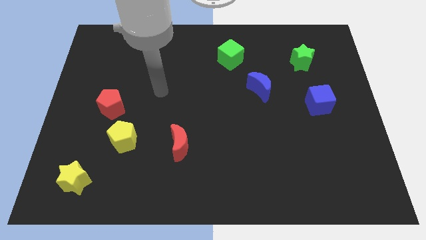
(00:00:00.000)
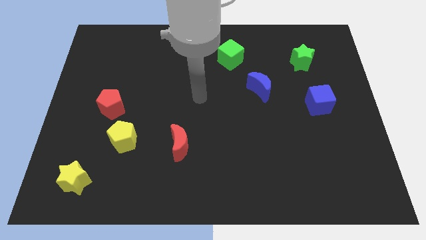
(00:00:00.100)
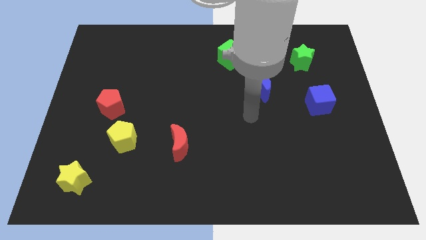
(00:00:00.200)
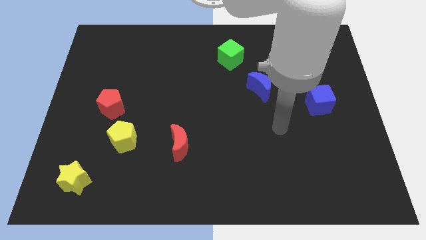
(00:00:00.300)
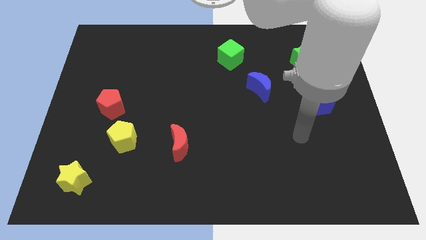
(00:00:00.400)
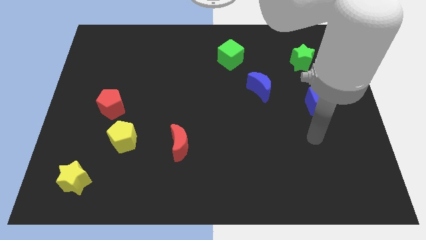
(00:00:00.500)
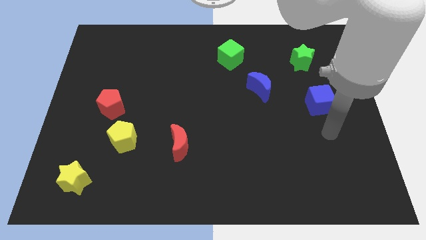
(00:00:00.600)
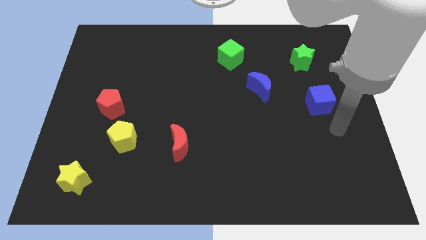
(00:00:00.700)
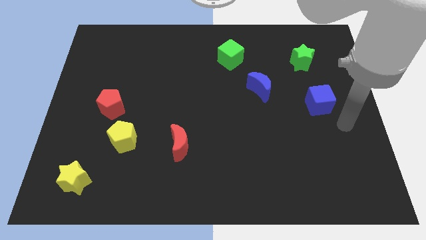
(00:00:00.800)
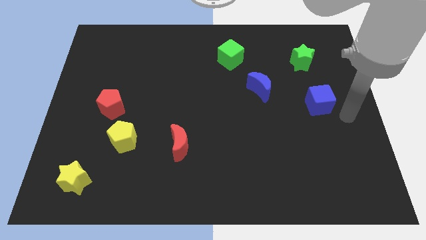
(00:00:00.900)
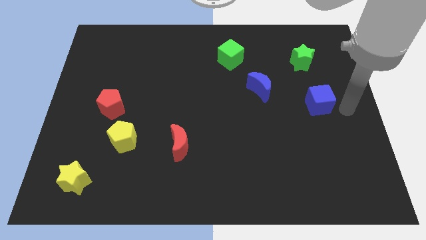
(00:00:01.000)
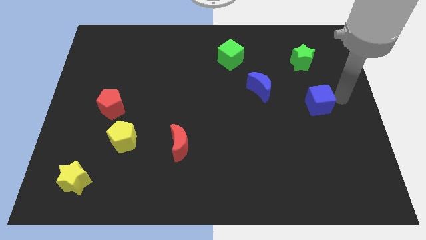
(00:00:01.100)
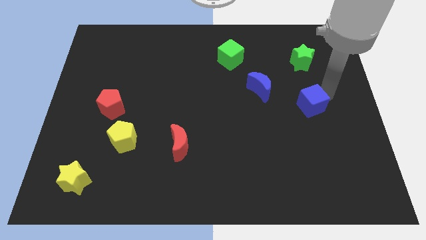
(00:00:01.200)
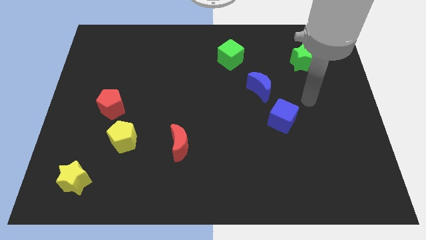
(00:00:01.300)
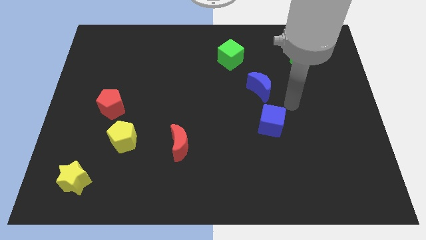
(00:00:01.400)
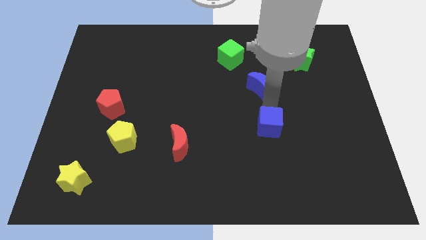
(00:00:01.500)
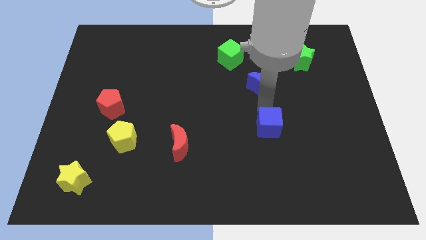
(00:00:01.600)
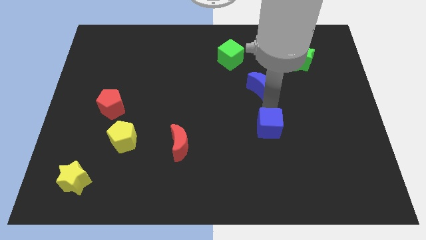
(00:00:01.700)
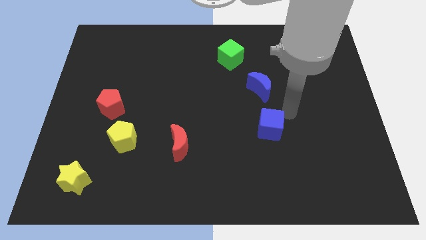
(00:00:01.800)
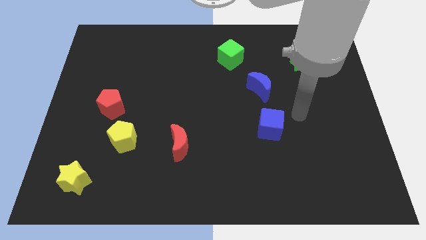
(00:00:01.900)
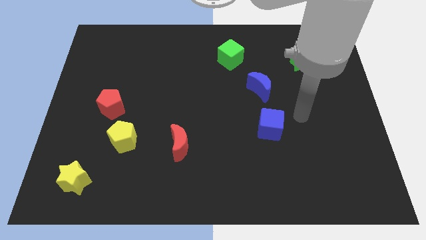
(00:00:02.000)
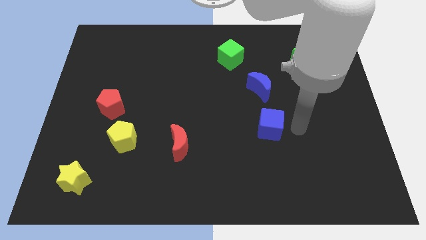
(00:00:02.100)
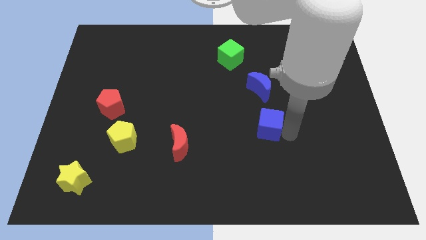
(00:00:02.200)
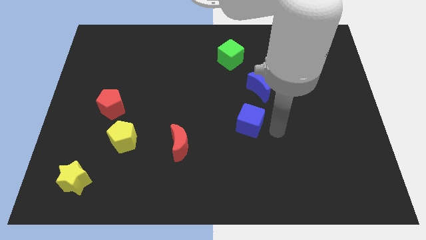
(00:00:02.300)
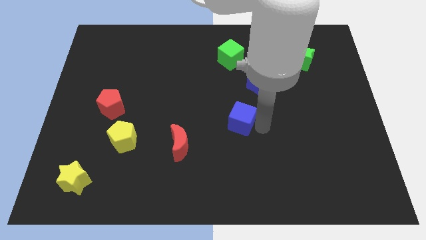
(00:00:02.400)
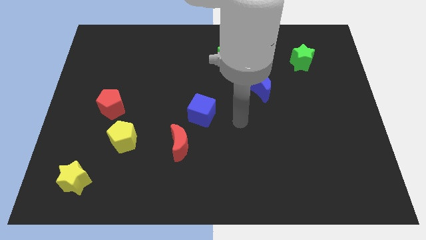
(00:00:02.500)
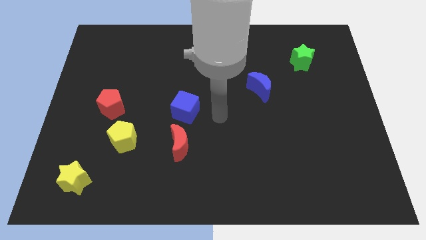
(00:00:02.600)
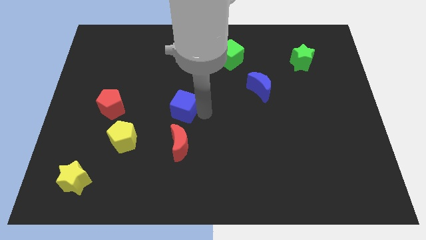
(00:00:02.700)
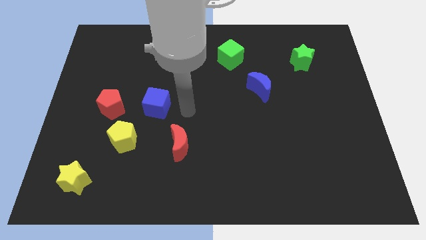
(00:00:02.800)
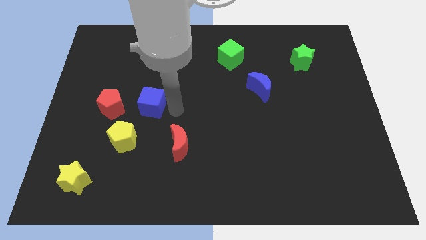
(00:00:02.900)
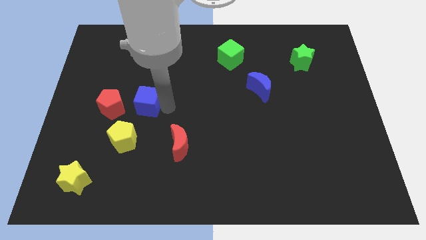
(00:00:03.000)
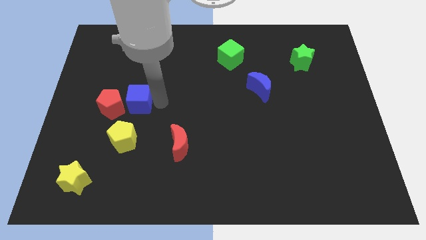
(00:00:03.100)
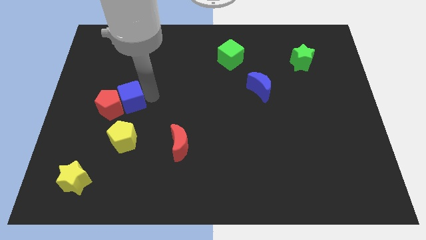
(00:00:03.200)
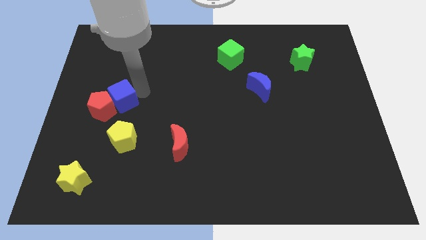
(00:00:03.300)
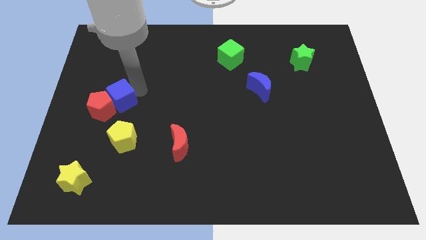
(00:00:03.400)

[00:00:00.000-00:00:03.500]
move the blue cube to the red pentagon

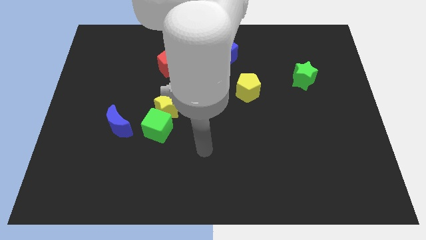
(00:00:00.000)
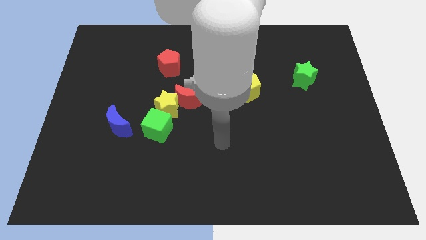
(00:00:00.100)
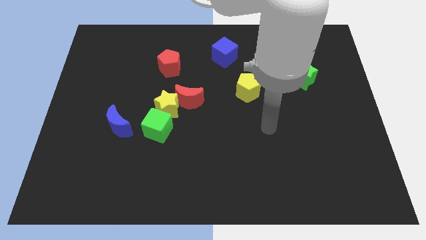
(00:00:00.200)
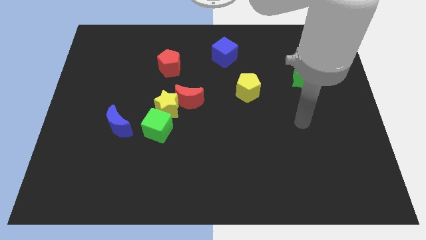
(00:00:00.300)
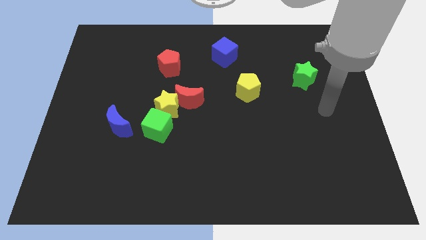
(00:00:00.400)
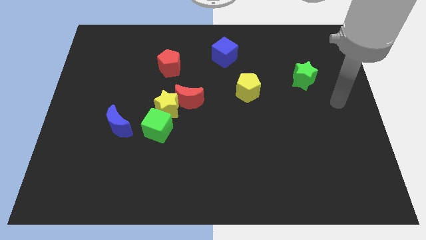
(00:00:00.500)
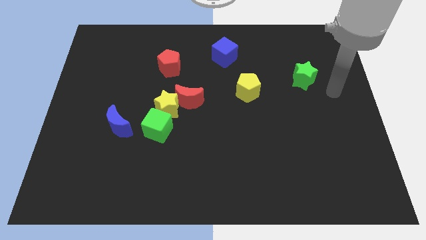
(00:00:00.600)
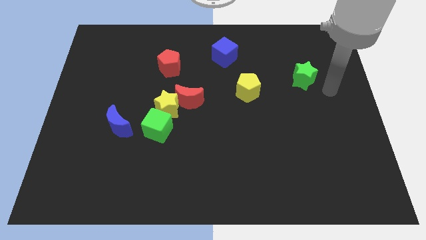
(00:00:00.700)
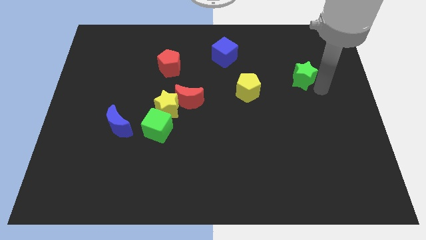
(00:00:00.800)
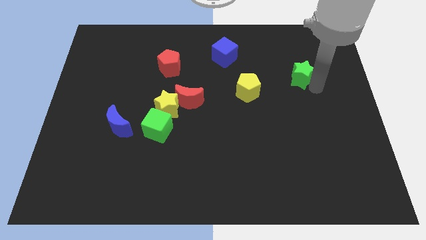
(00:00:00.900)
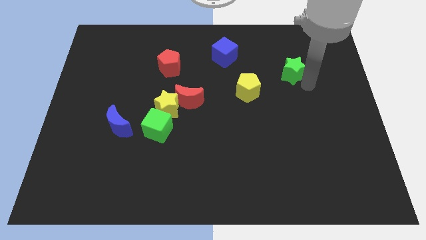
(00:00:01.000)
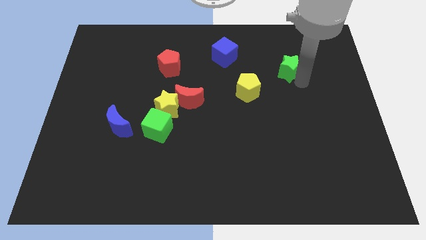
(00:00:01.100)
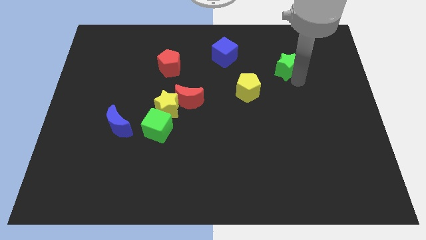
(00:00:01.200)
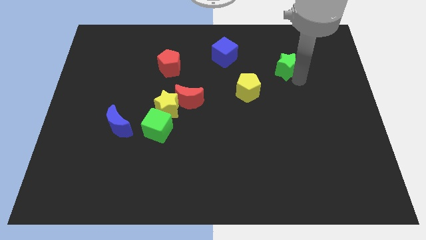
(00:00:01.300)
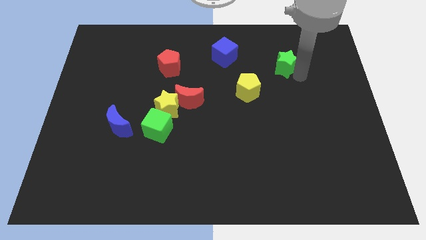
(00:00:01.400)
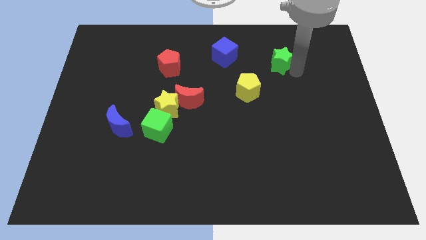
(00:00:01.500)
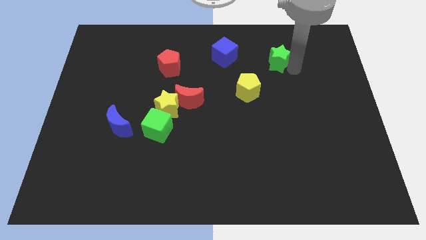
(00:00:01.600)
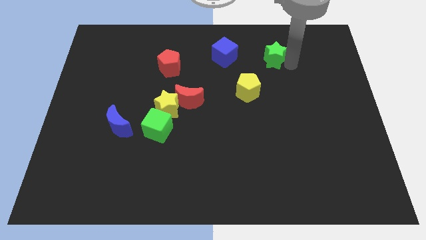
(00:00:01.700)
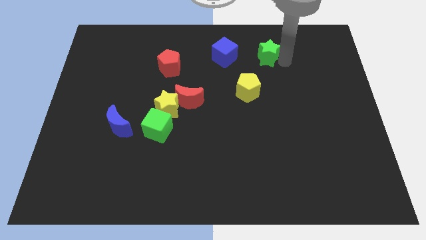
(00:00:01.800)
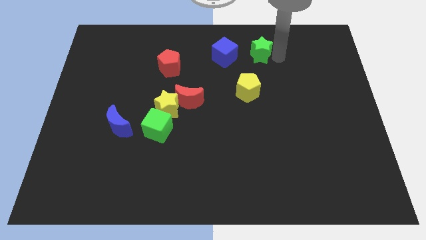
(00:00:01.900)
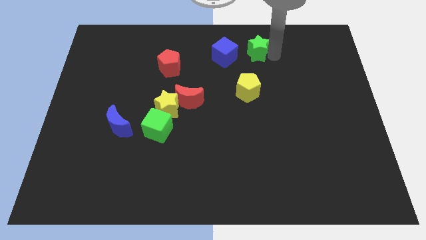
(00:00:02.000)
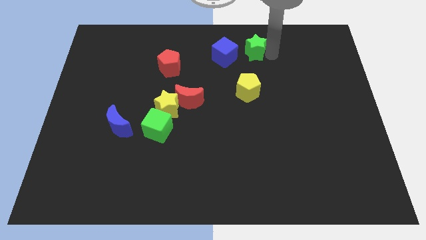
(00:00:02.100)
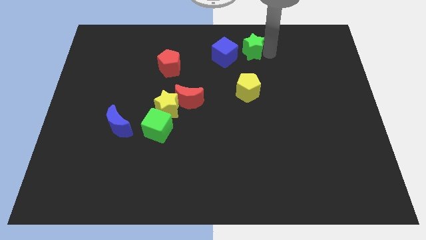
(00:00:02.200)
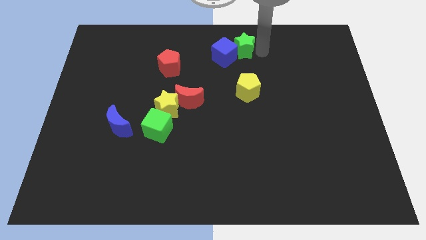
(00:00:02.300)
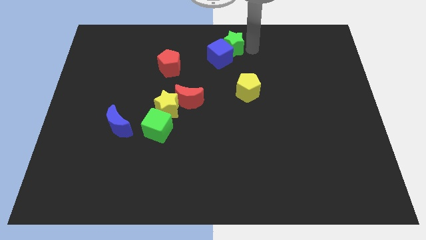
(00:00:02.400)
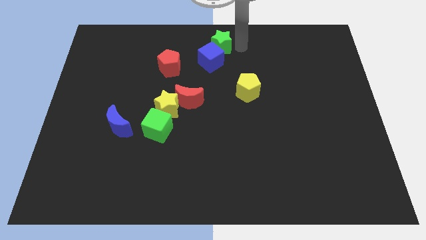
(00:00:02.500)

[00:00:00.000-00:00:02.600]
push the green star next to the blue cube

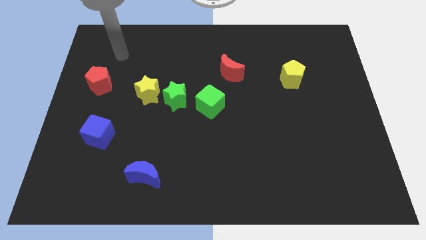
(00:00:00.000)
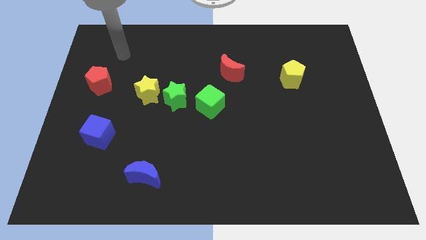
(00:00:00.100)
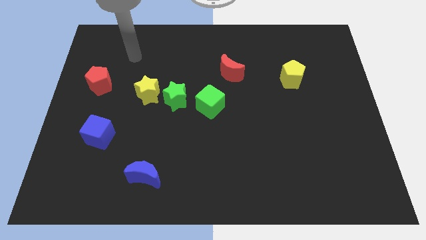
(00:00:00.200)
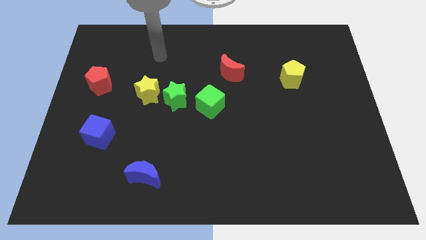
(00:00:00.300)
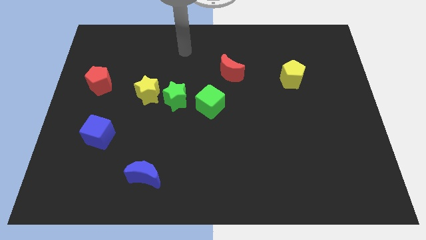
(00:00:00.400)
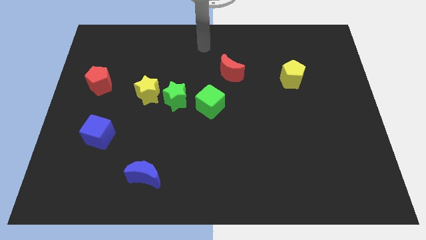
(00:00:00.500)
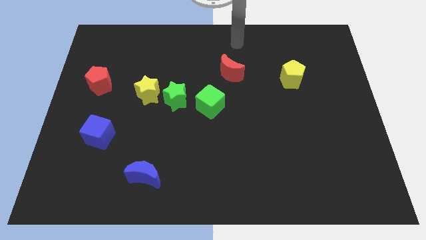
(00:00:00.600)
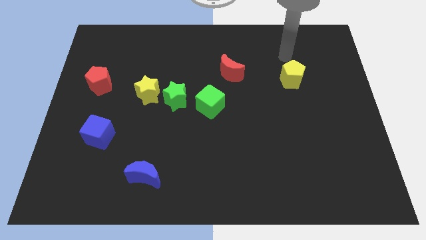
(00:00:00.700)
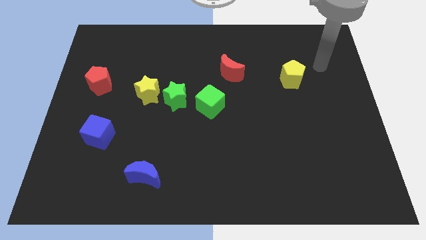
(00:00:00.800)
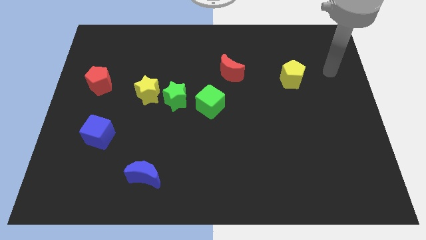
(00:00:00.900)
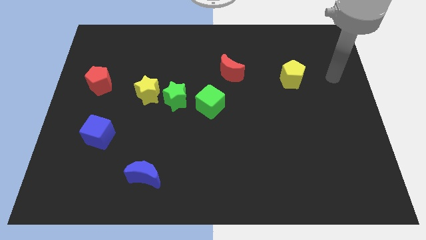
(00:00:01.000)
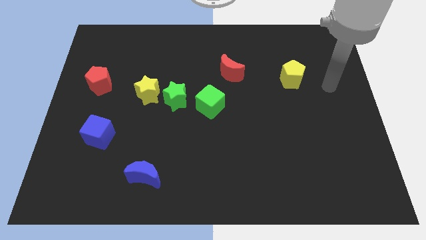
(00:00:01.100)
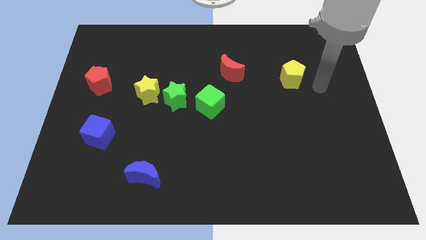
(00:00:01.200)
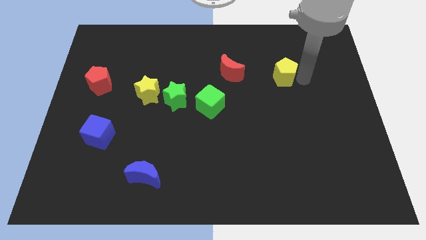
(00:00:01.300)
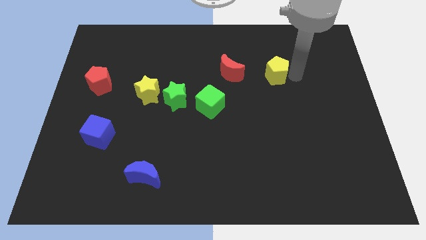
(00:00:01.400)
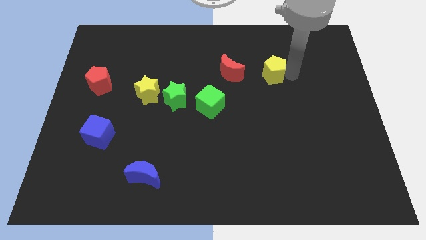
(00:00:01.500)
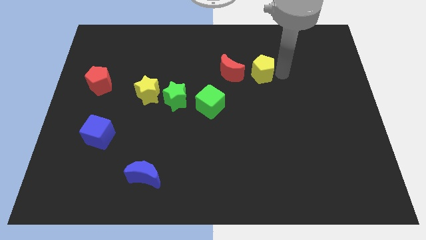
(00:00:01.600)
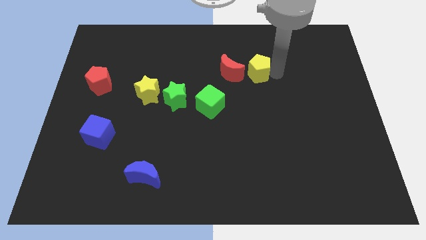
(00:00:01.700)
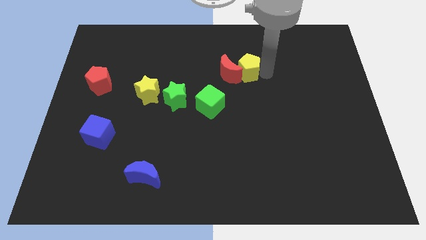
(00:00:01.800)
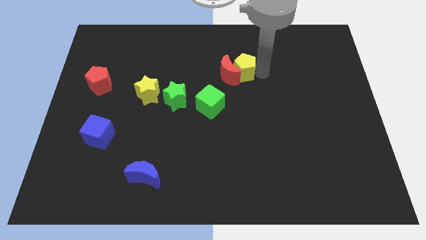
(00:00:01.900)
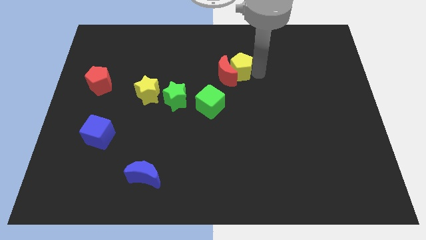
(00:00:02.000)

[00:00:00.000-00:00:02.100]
put the yellow pentagon towards the red moon
